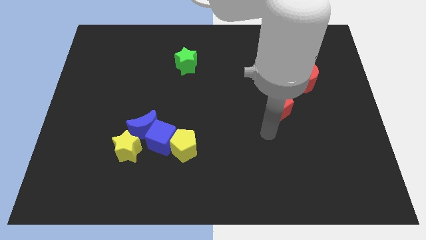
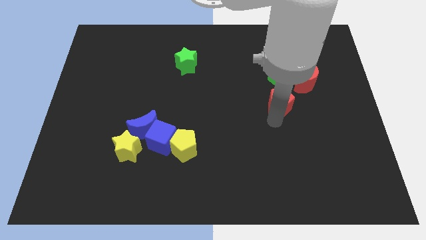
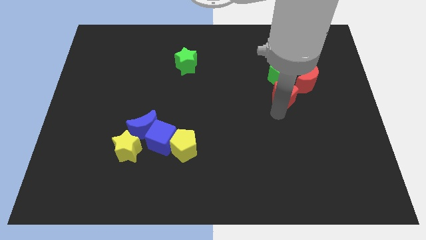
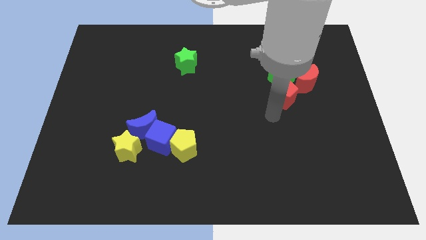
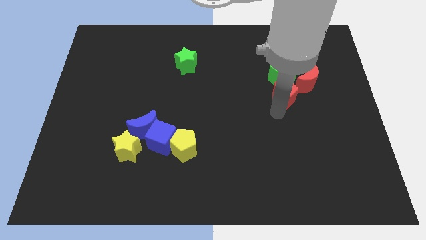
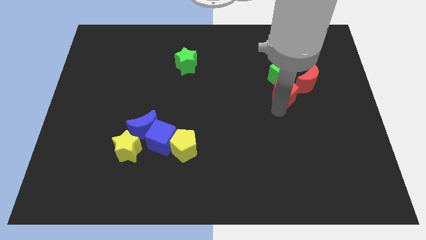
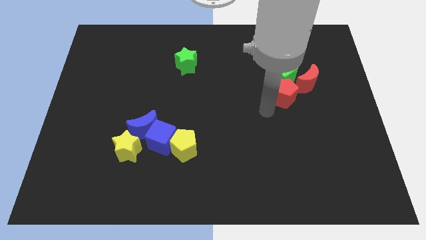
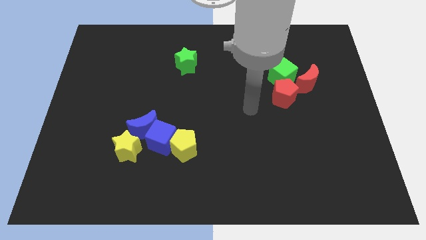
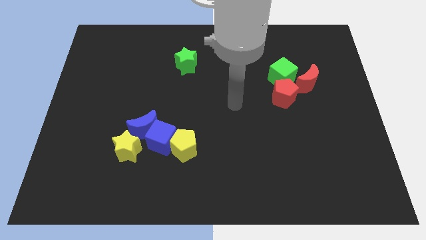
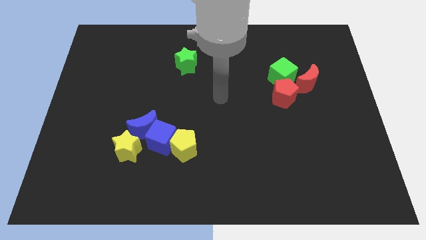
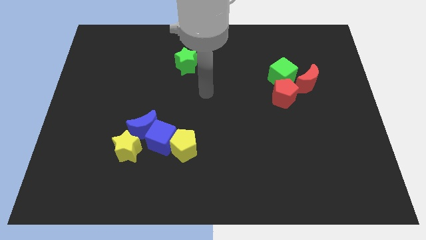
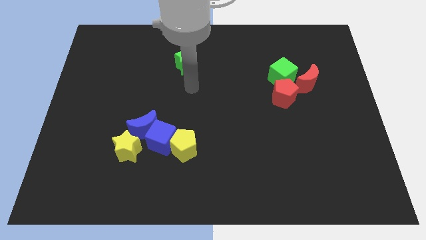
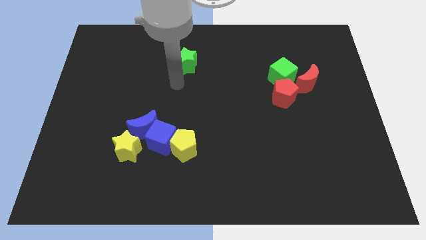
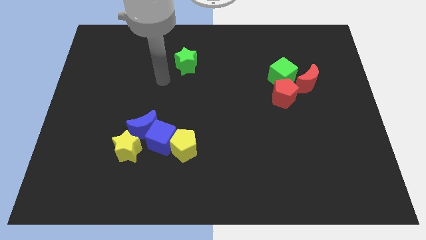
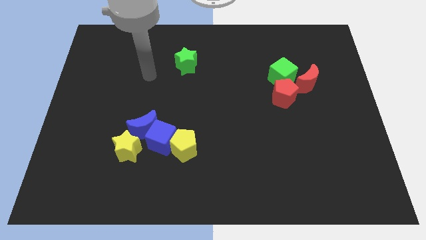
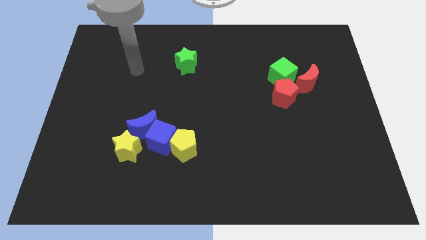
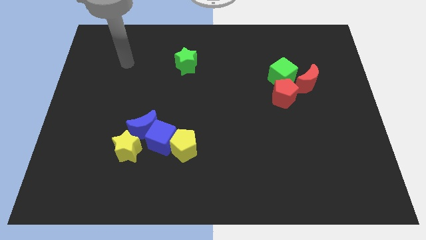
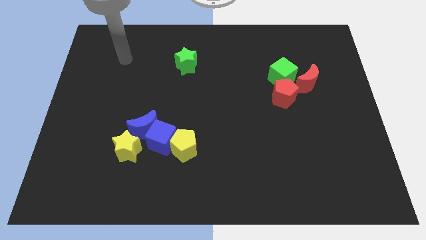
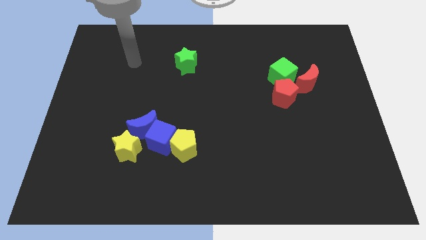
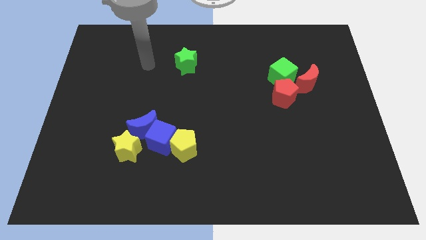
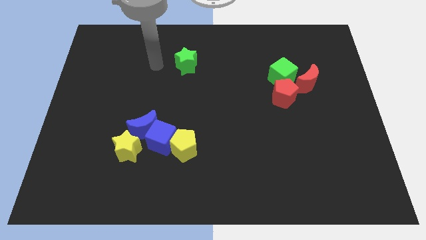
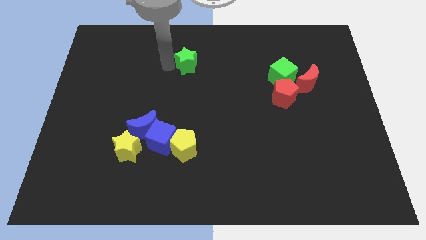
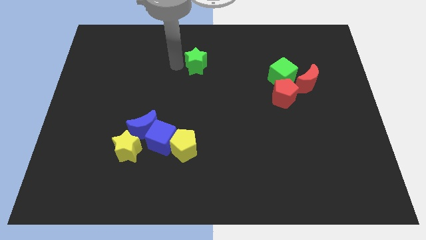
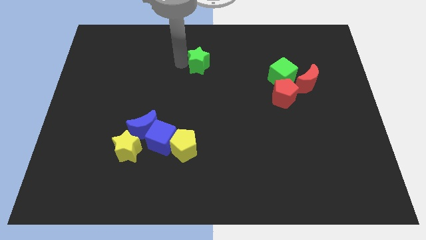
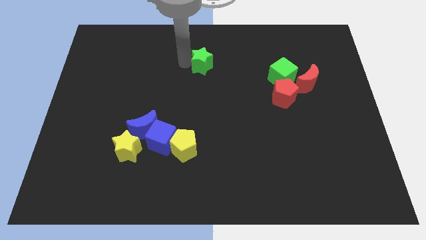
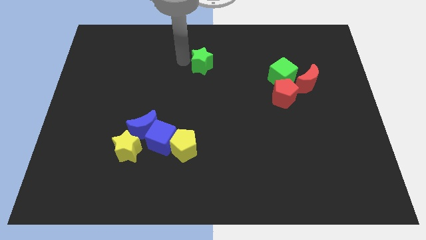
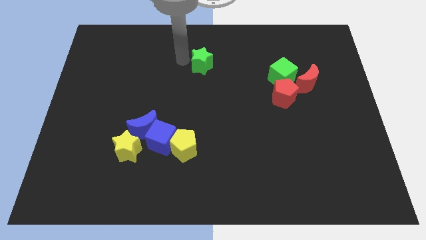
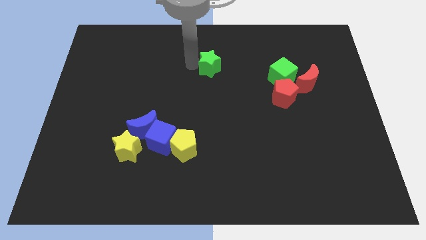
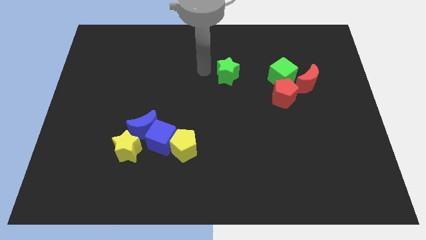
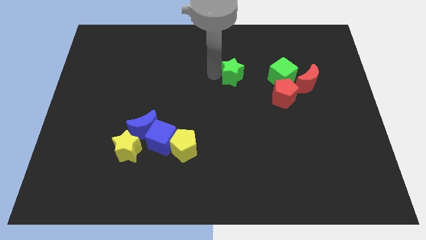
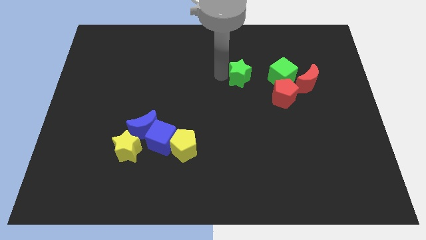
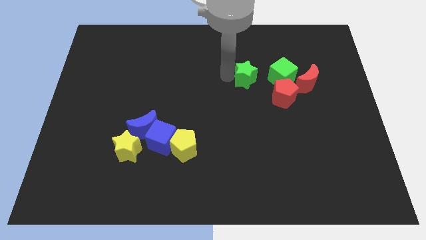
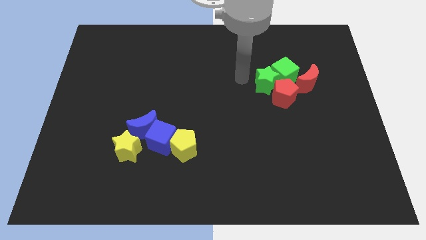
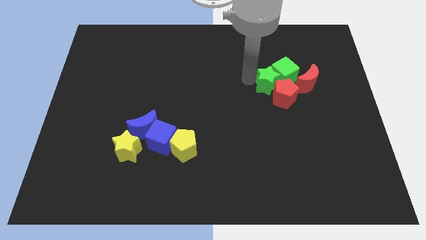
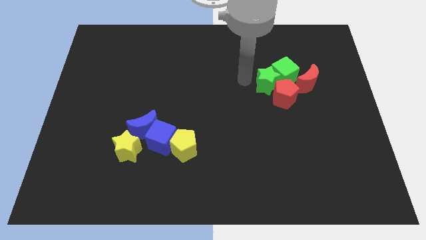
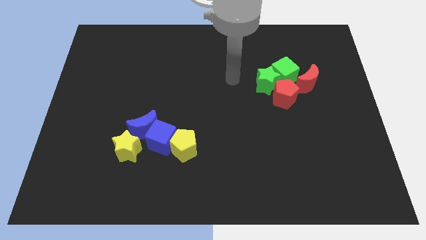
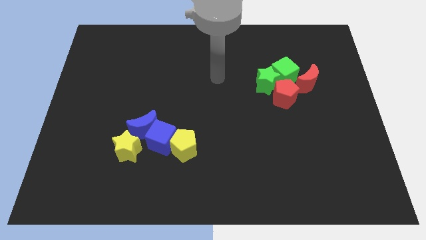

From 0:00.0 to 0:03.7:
move green star into the group of blocks

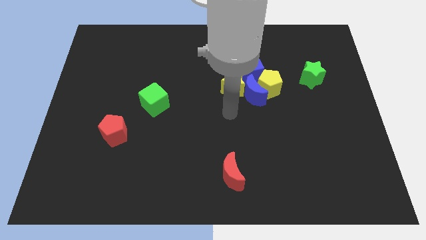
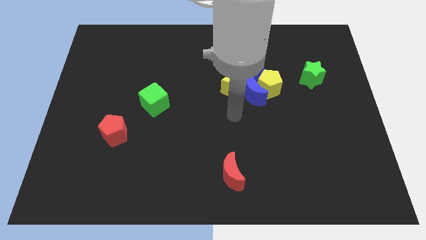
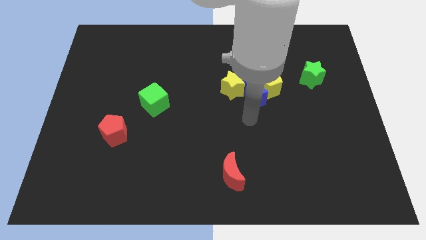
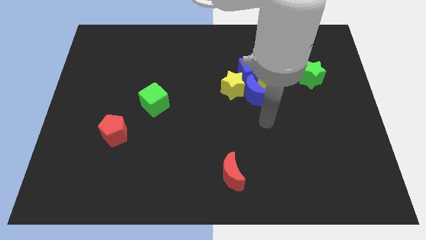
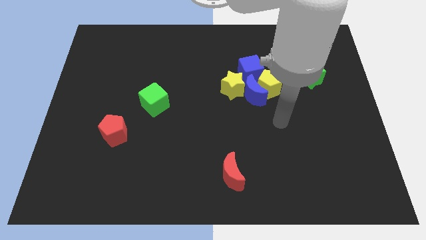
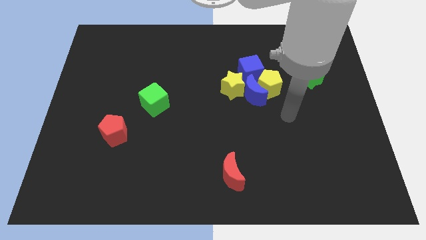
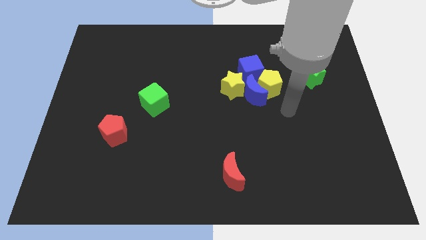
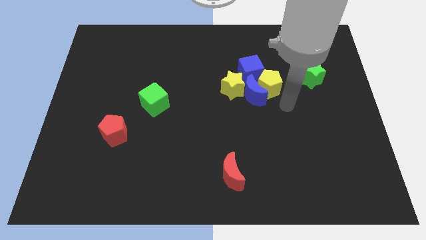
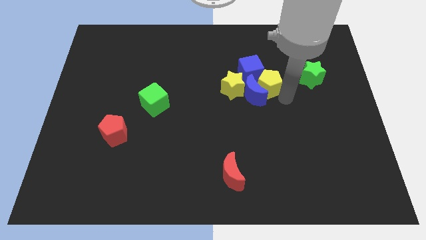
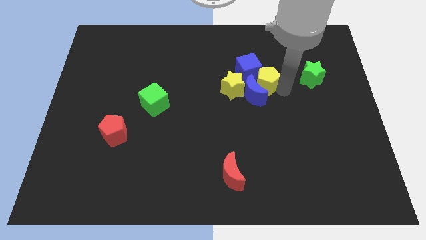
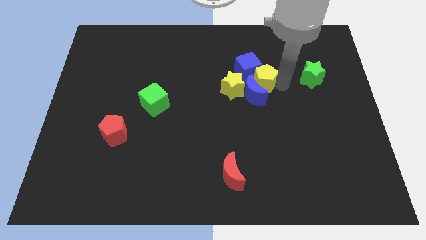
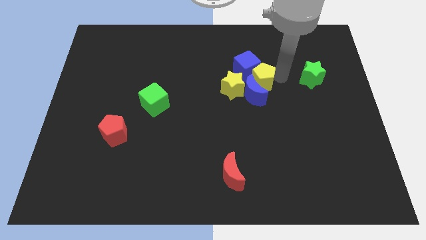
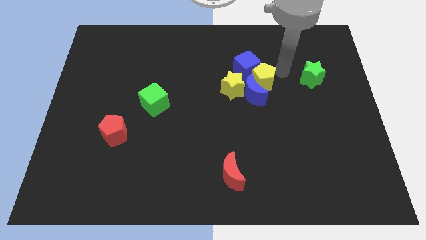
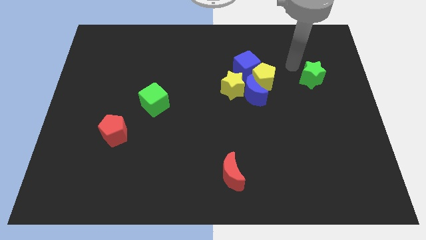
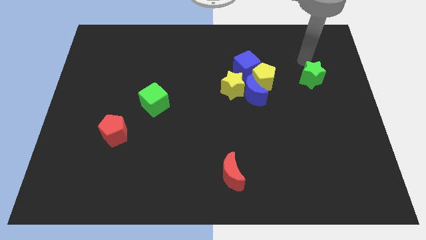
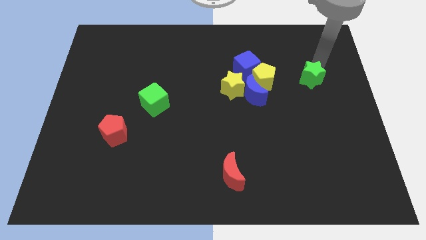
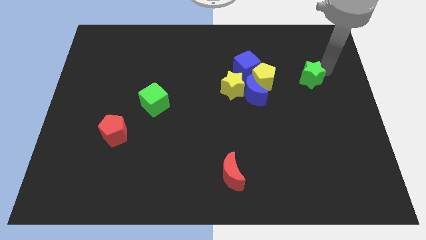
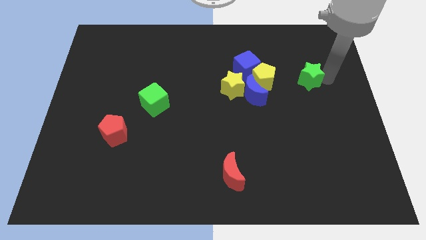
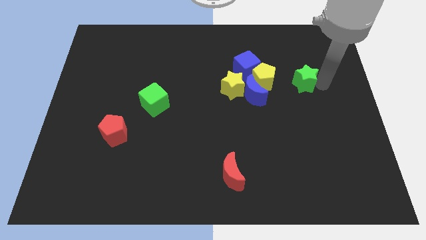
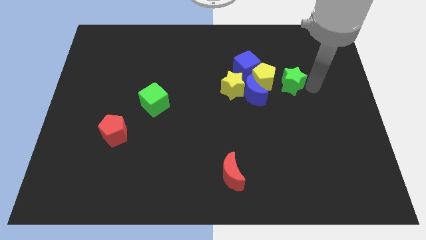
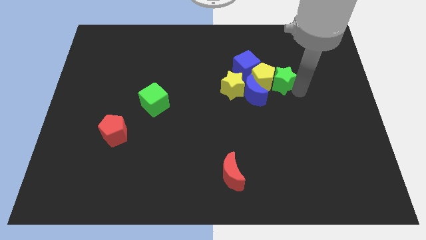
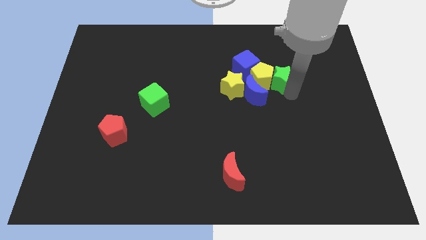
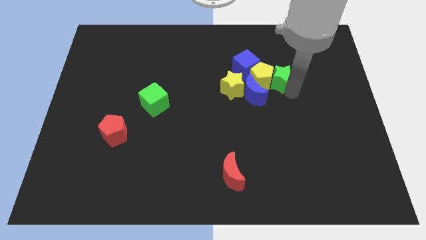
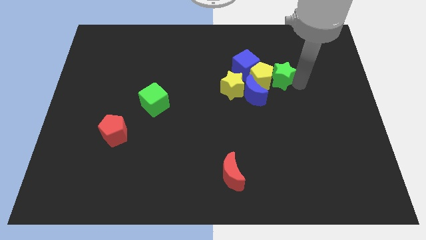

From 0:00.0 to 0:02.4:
push the green star into the yellow pentagon

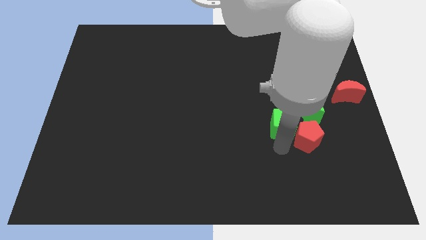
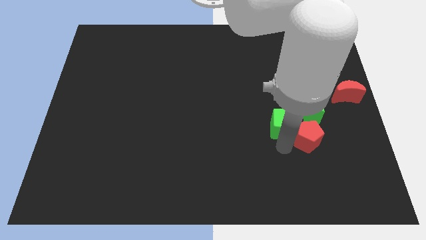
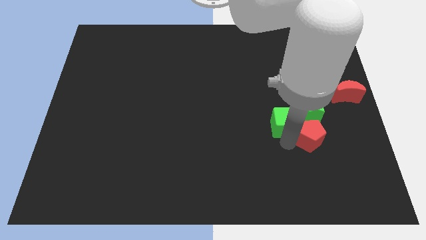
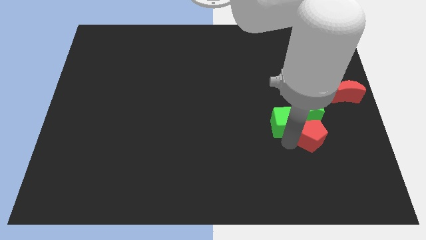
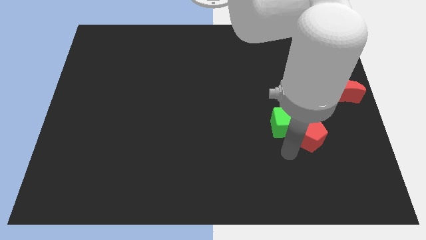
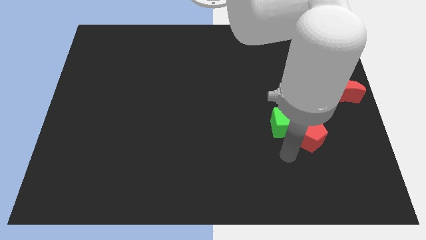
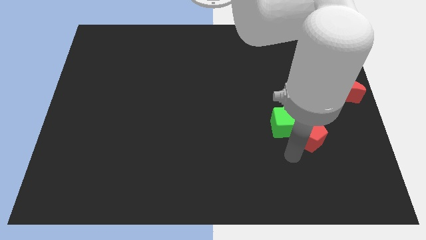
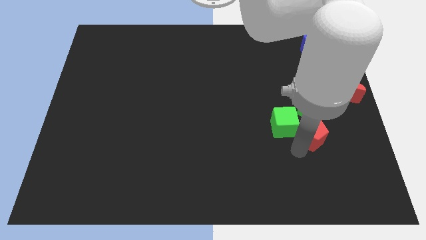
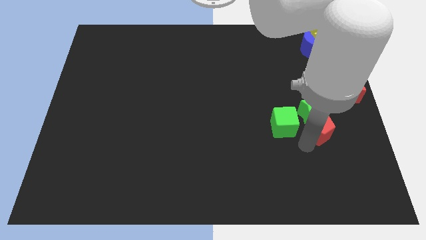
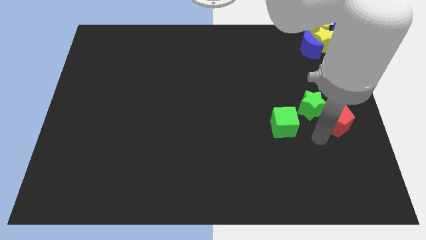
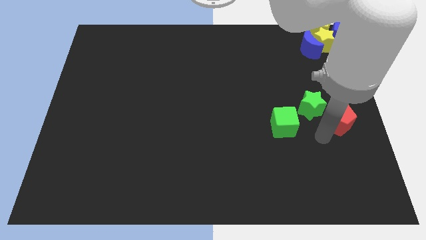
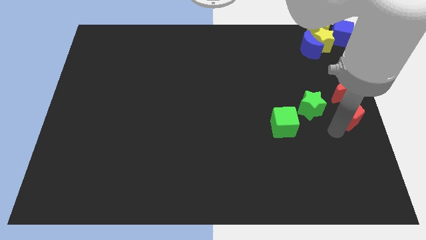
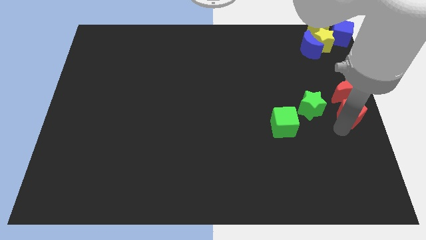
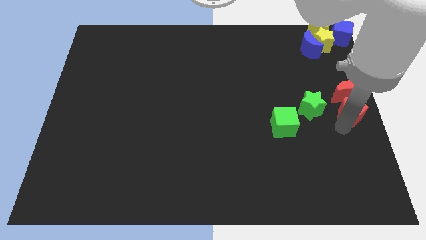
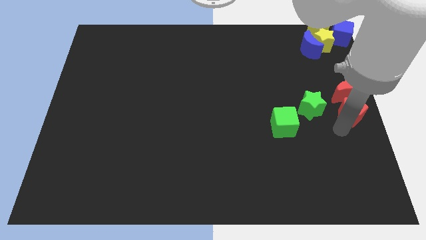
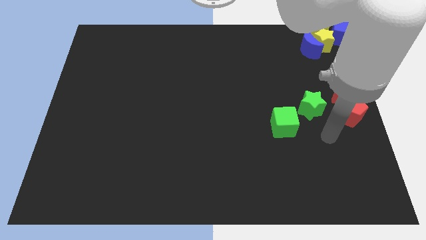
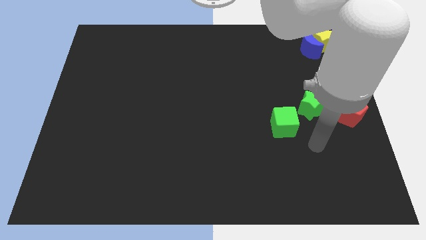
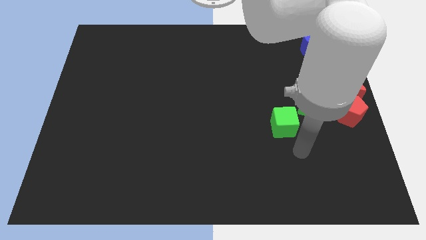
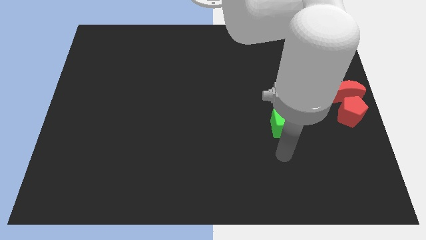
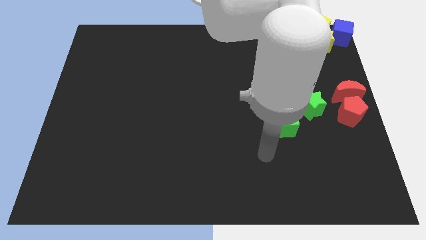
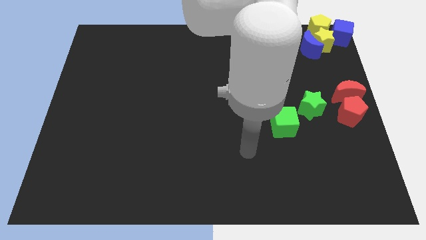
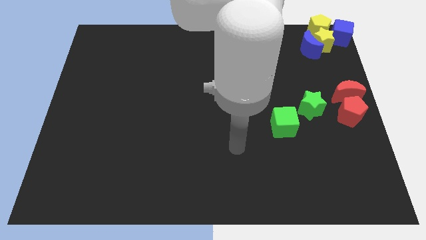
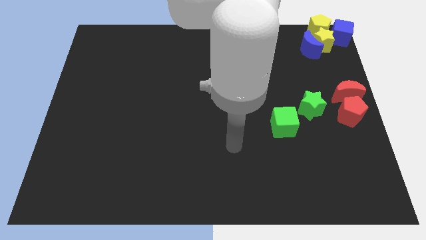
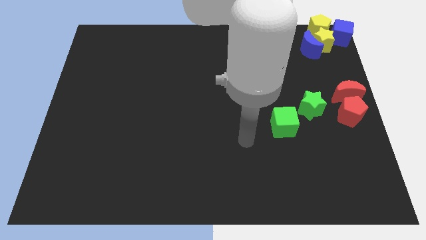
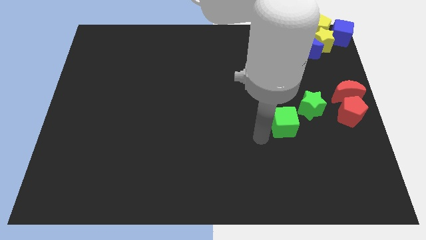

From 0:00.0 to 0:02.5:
move red pentagon close to the red moon

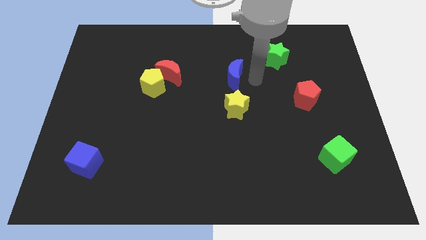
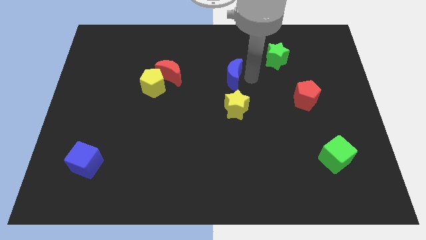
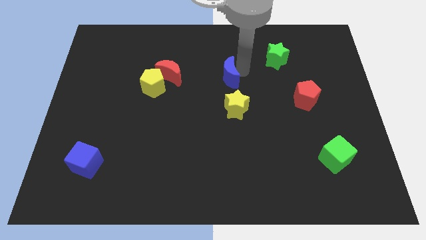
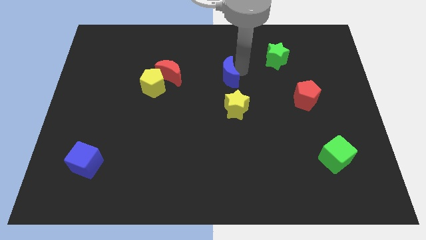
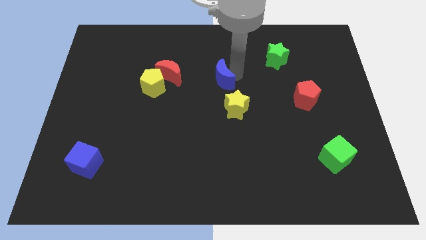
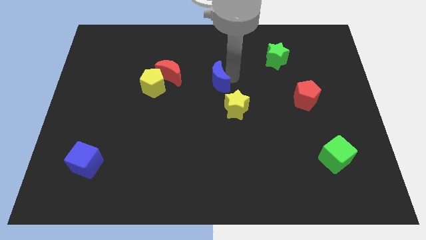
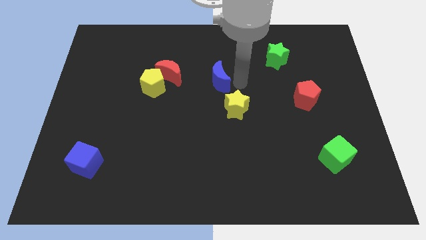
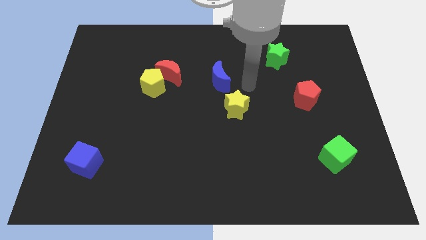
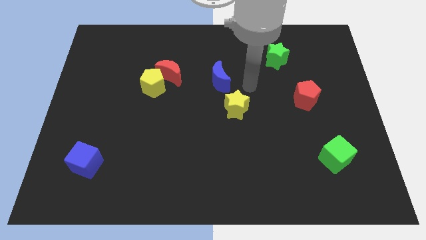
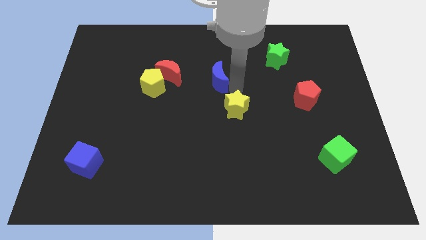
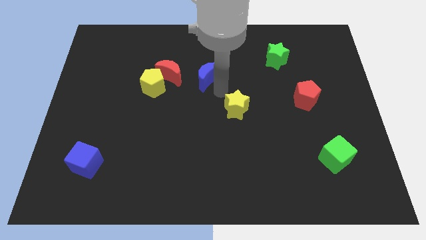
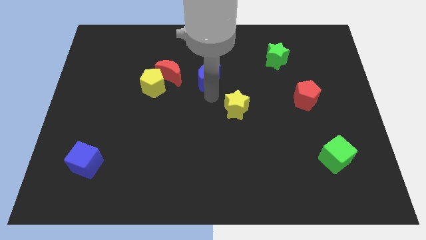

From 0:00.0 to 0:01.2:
push the blue crescent to the left of the board
